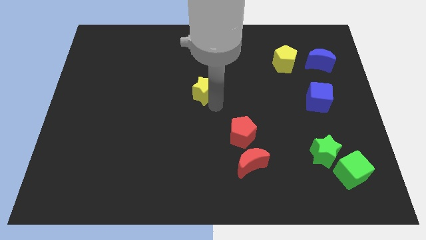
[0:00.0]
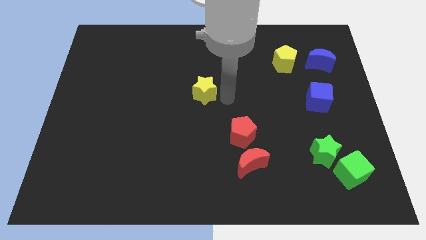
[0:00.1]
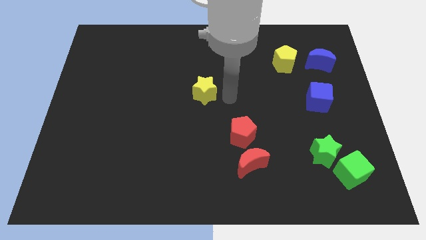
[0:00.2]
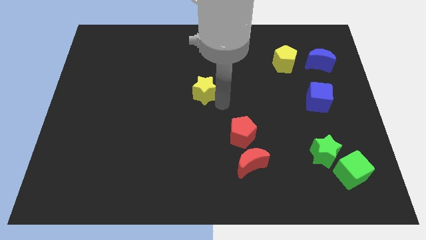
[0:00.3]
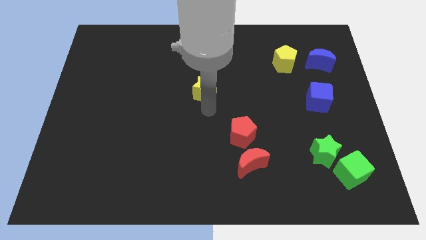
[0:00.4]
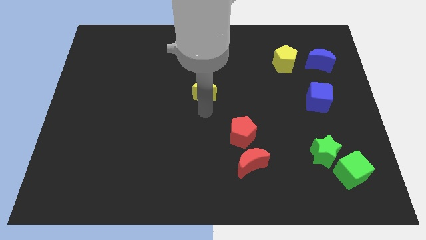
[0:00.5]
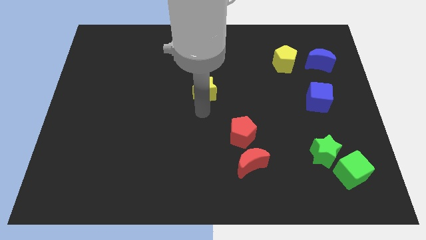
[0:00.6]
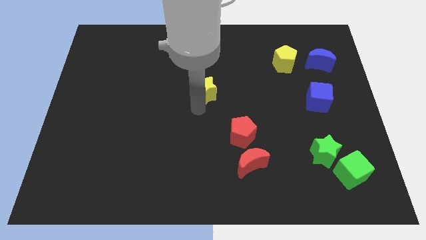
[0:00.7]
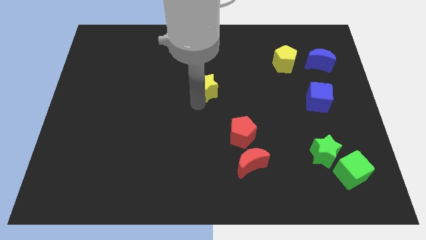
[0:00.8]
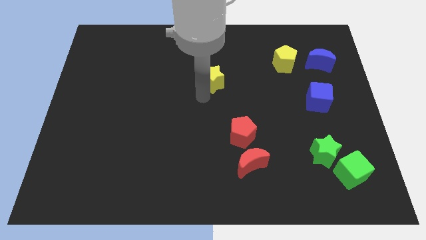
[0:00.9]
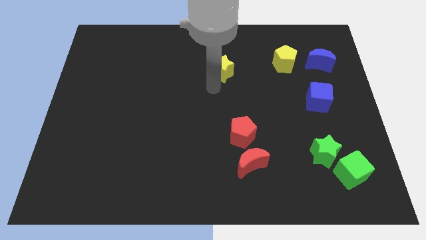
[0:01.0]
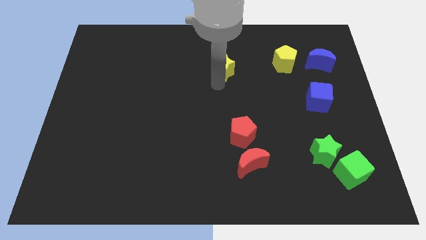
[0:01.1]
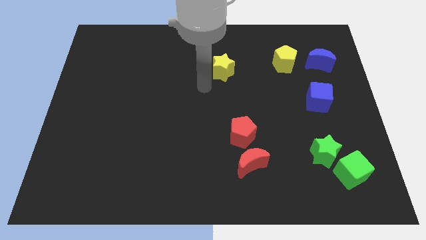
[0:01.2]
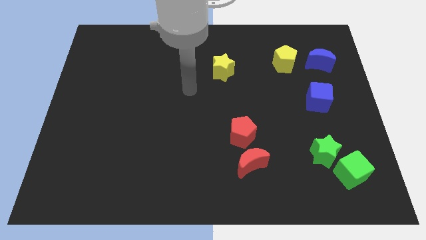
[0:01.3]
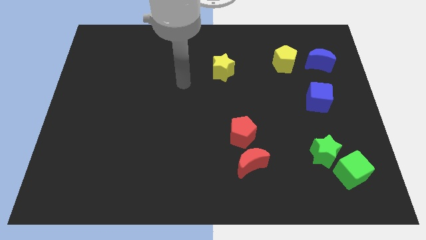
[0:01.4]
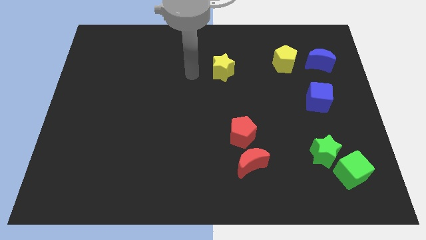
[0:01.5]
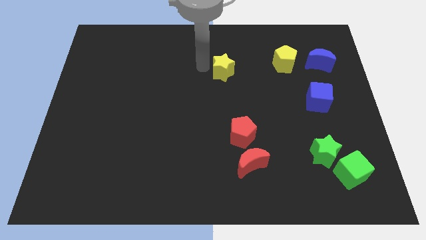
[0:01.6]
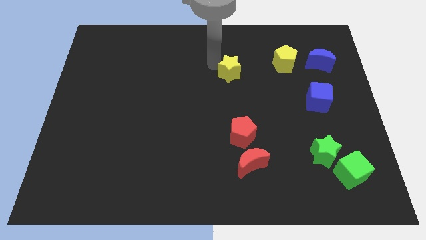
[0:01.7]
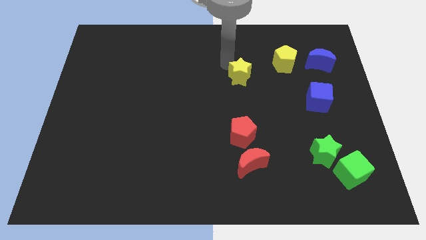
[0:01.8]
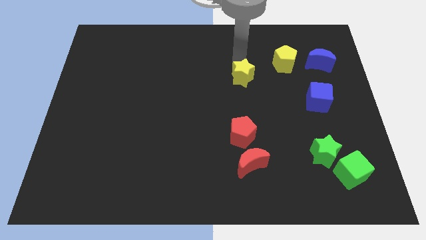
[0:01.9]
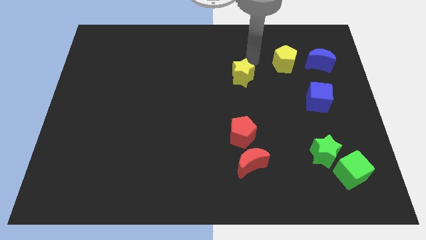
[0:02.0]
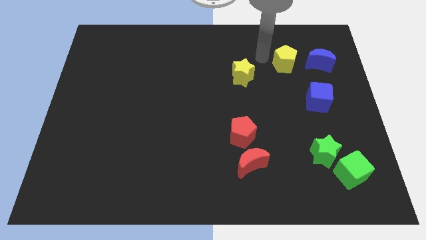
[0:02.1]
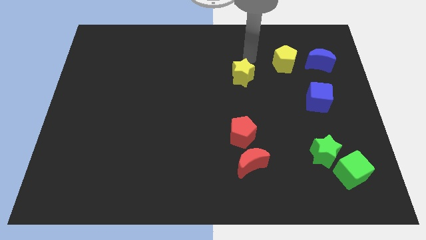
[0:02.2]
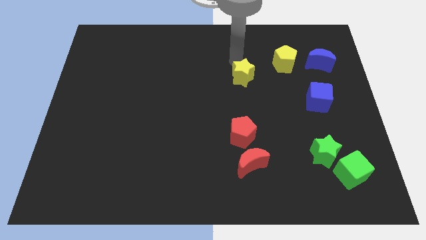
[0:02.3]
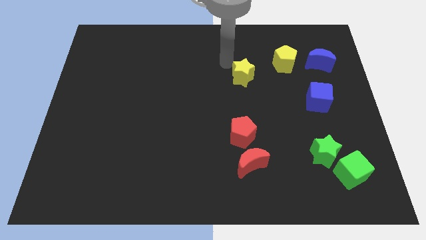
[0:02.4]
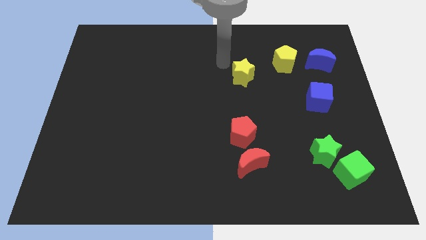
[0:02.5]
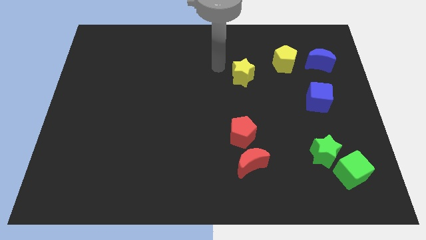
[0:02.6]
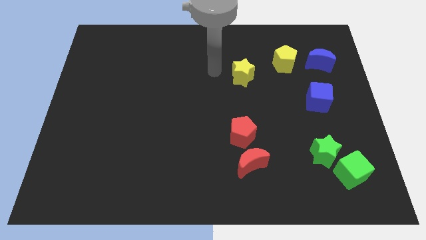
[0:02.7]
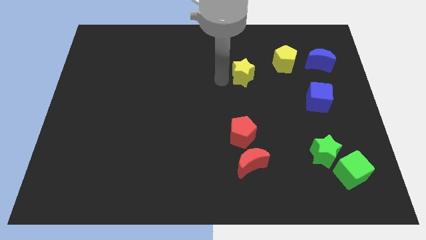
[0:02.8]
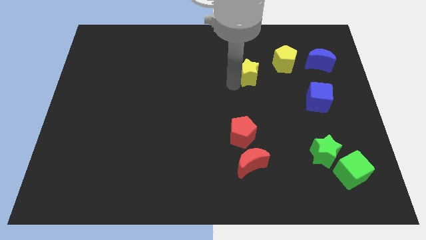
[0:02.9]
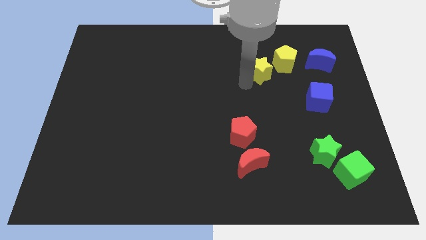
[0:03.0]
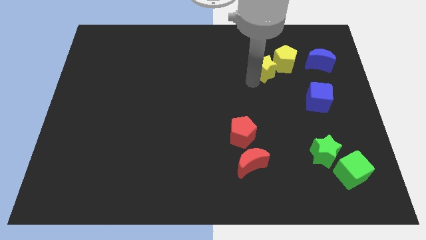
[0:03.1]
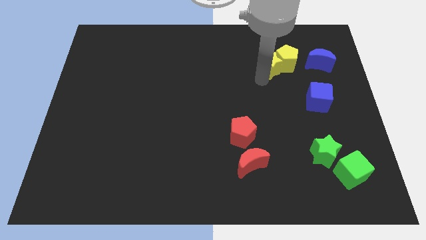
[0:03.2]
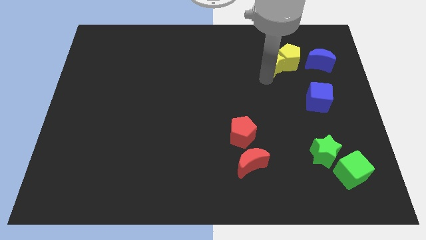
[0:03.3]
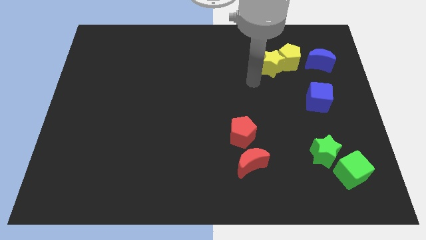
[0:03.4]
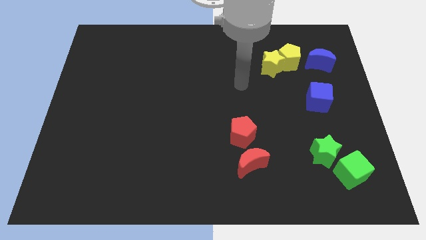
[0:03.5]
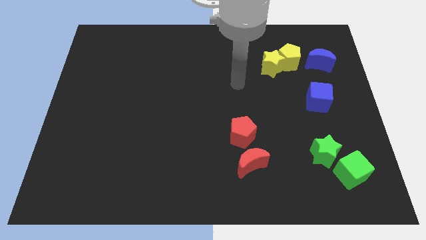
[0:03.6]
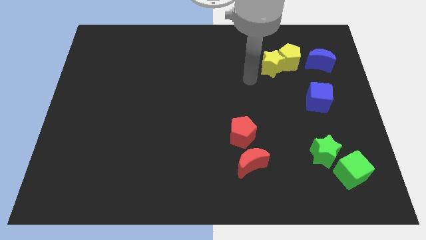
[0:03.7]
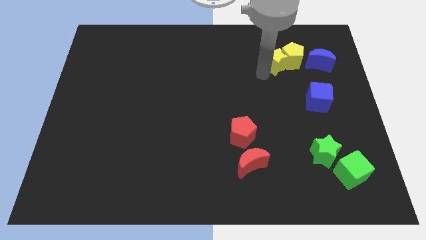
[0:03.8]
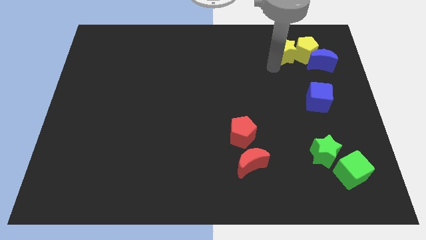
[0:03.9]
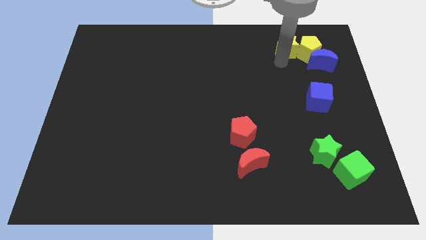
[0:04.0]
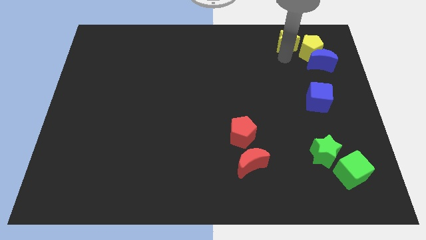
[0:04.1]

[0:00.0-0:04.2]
place the yellow star to the left of the yellow pentagon

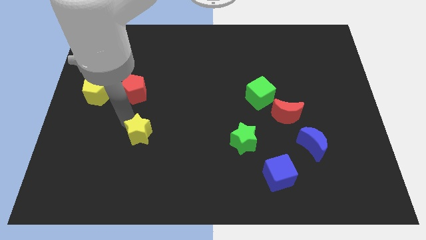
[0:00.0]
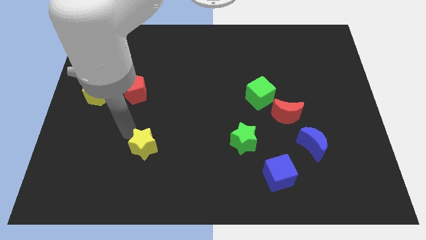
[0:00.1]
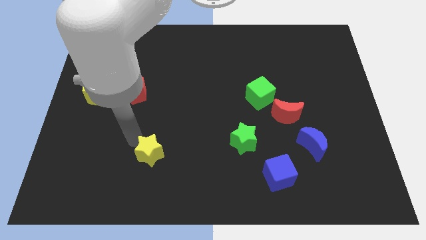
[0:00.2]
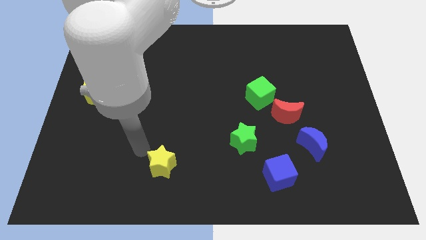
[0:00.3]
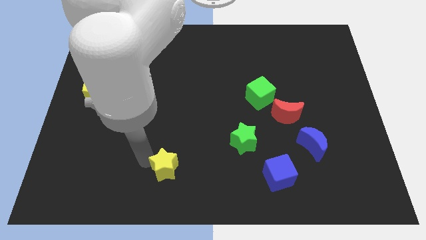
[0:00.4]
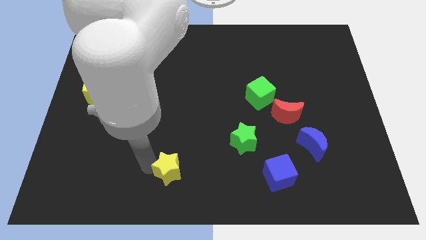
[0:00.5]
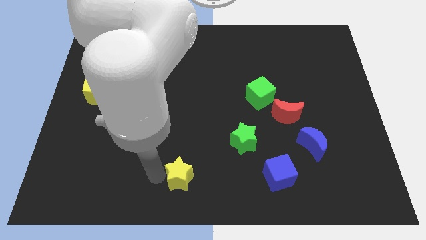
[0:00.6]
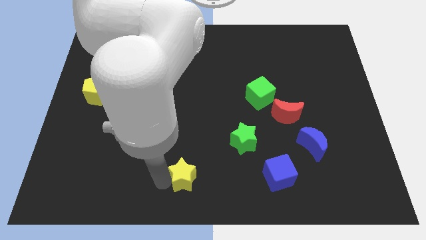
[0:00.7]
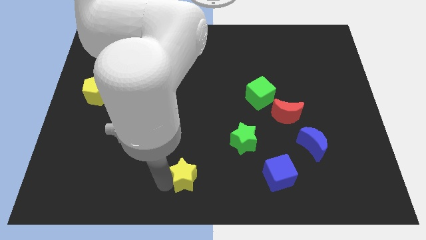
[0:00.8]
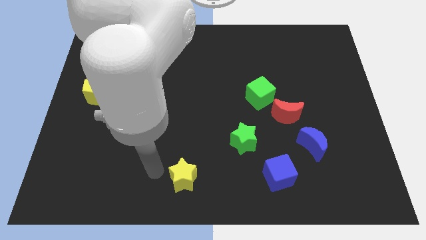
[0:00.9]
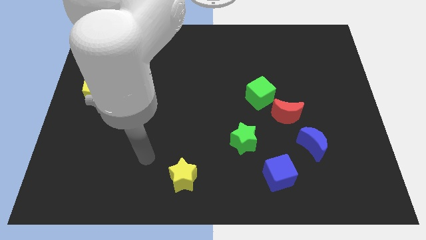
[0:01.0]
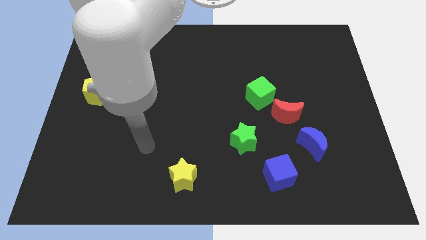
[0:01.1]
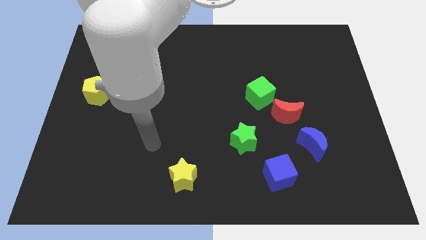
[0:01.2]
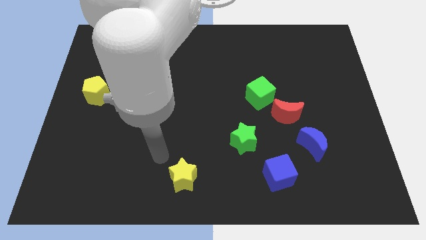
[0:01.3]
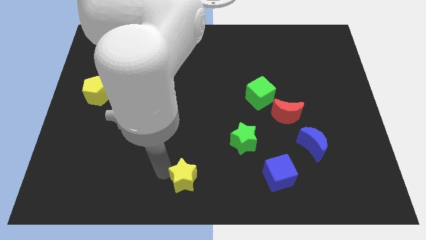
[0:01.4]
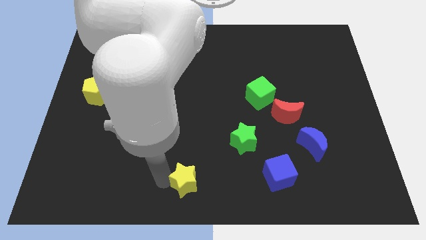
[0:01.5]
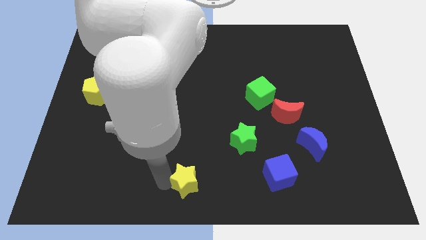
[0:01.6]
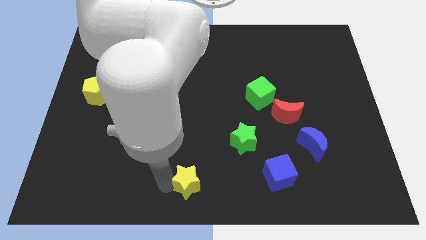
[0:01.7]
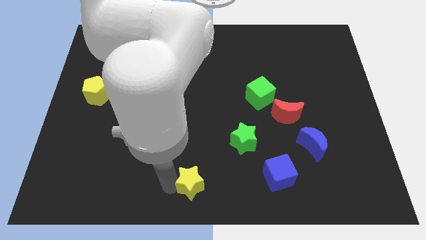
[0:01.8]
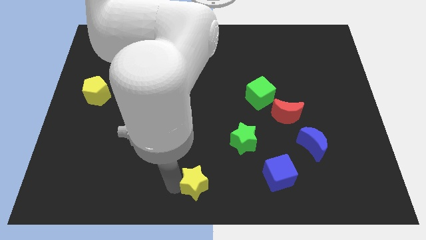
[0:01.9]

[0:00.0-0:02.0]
push the yellow star towards the bottom center

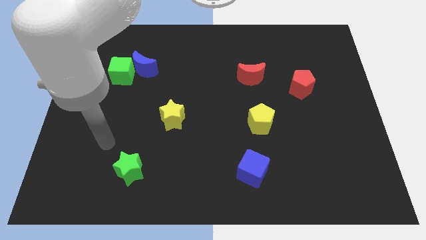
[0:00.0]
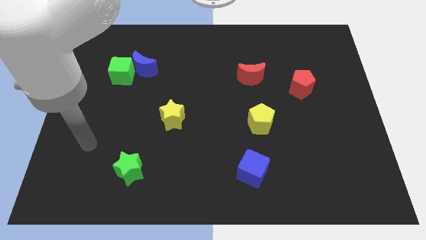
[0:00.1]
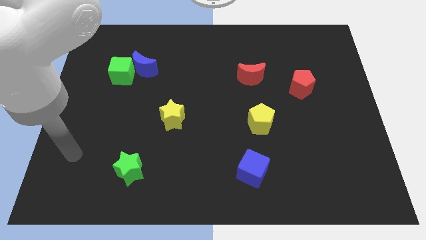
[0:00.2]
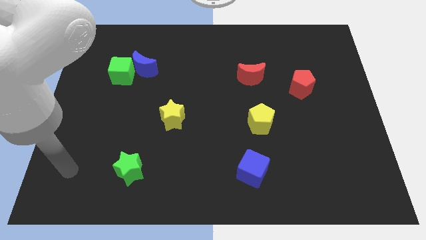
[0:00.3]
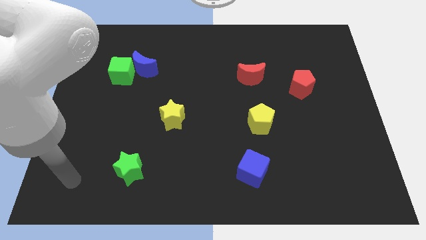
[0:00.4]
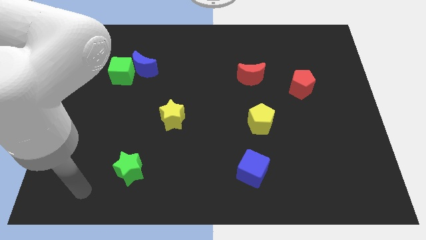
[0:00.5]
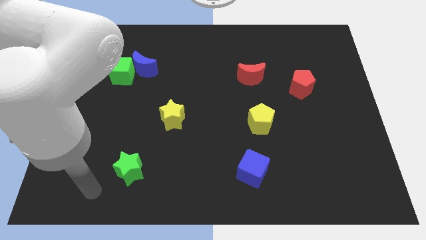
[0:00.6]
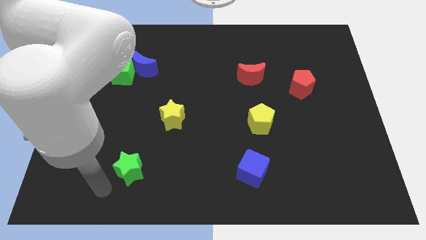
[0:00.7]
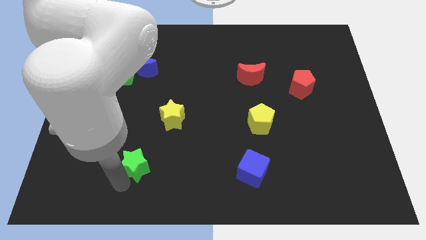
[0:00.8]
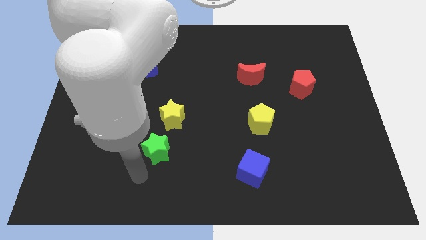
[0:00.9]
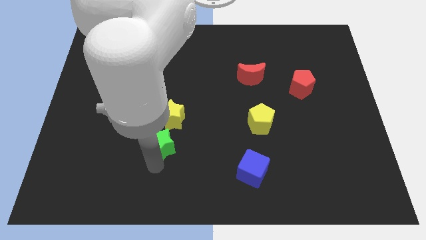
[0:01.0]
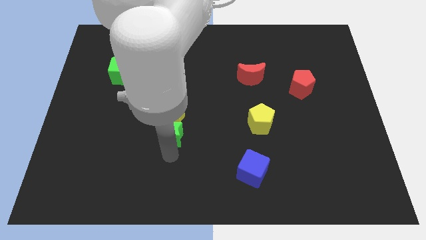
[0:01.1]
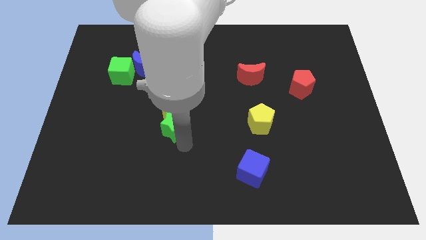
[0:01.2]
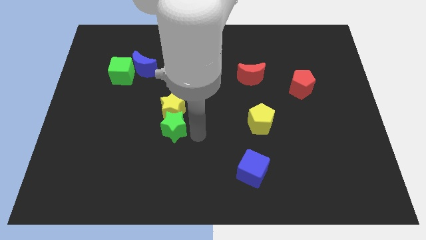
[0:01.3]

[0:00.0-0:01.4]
slide the green star into the yellow star

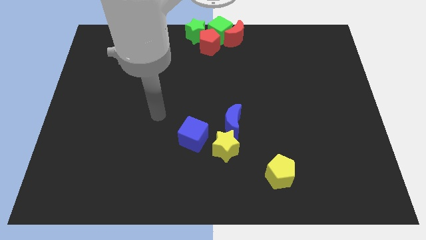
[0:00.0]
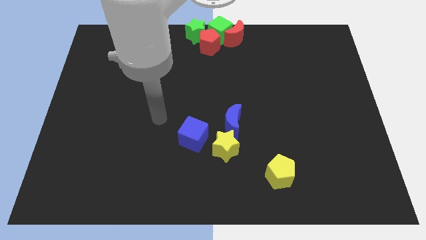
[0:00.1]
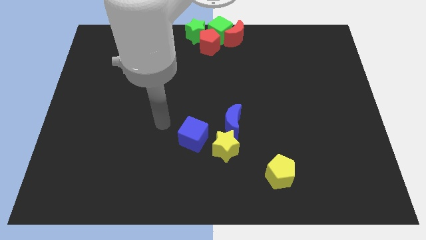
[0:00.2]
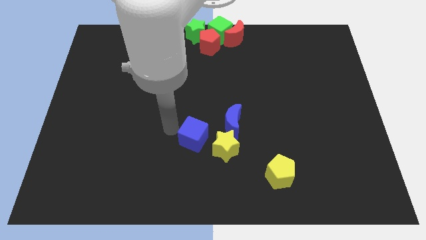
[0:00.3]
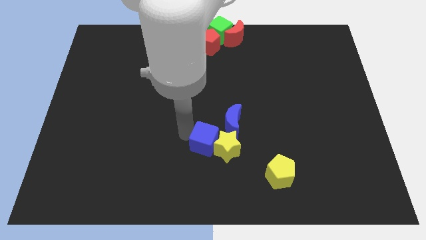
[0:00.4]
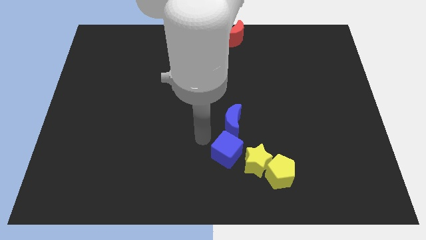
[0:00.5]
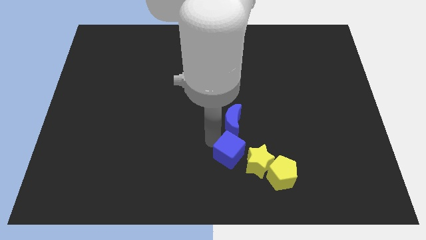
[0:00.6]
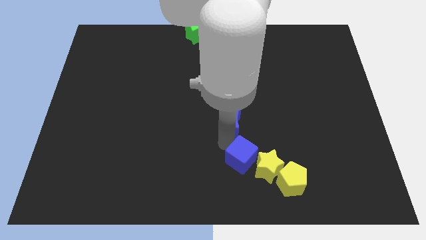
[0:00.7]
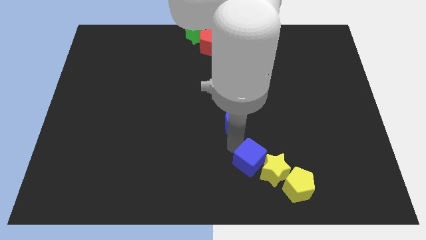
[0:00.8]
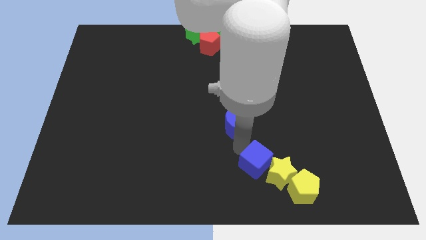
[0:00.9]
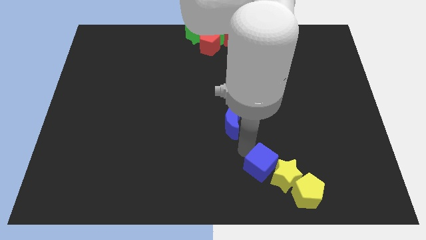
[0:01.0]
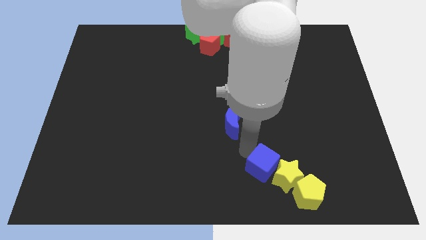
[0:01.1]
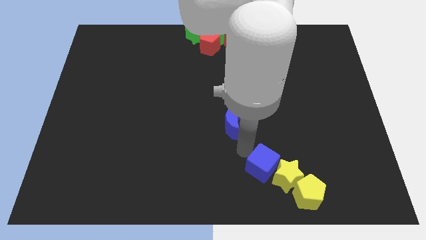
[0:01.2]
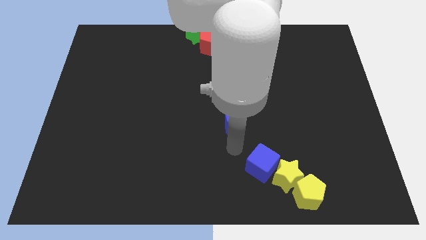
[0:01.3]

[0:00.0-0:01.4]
push the blue cube into the yellow blocks downwards

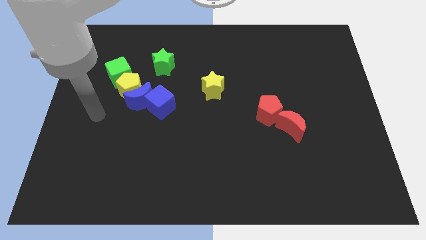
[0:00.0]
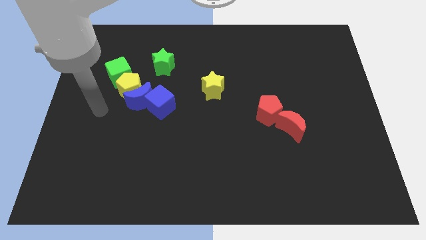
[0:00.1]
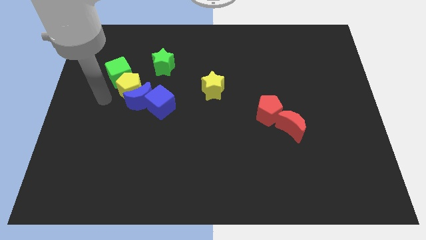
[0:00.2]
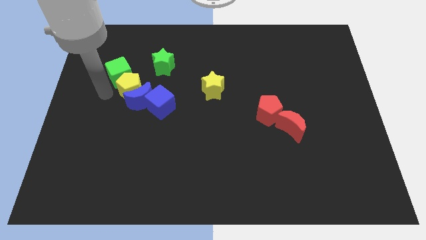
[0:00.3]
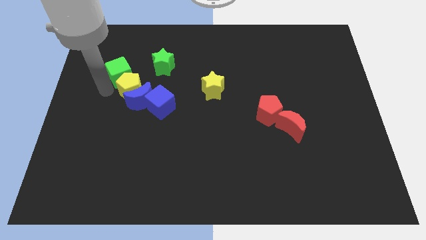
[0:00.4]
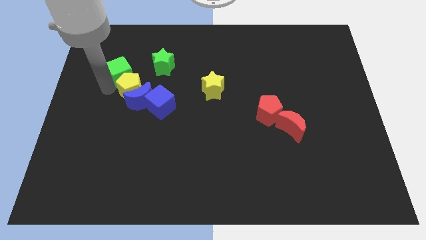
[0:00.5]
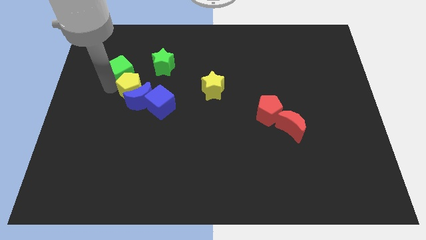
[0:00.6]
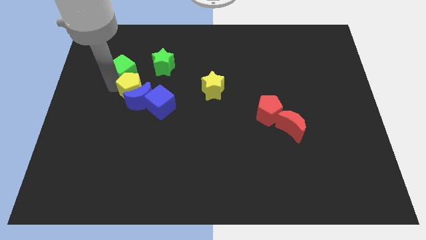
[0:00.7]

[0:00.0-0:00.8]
touch the green cube
